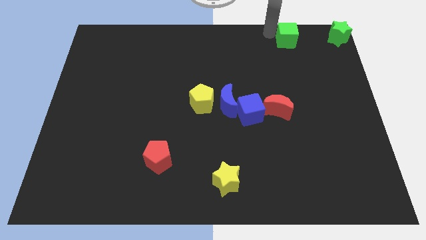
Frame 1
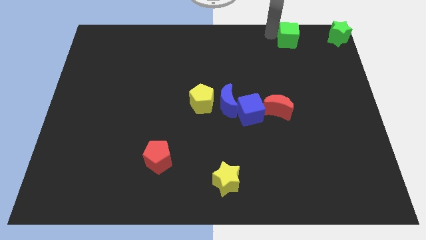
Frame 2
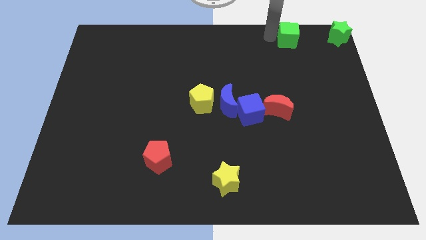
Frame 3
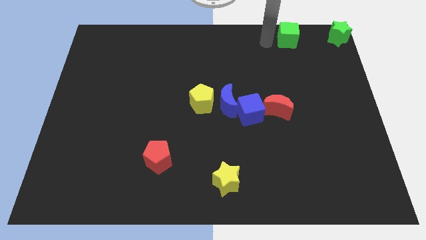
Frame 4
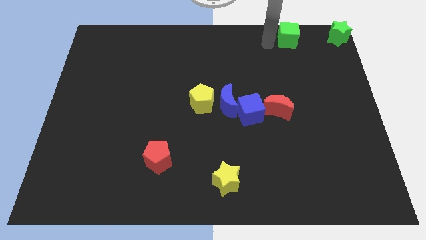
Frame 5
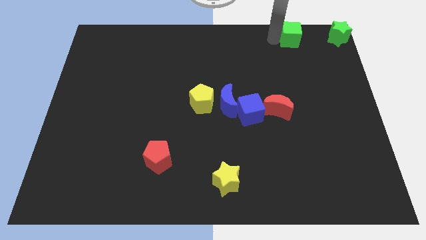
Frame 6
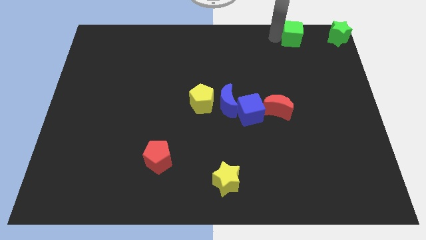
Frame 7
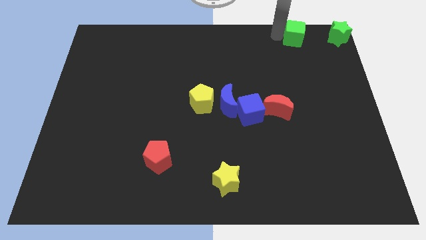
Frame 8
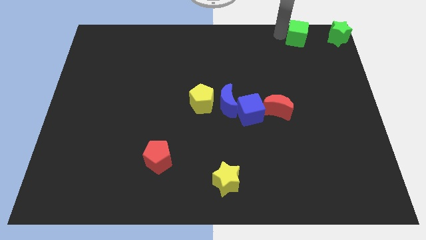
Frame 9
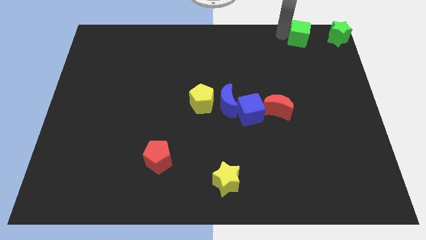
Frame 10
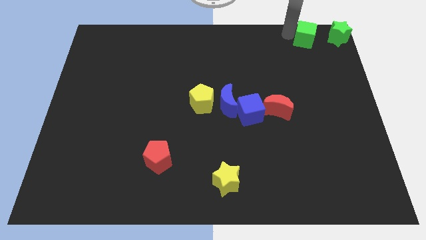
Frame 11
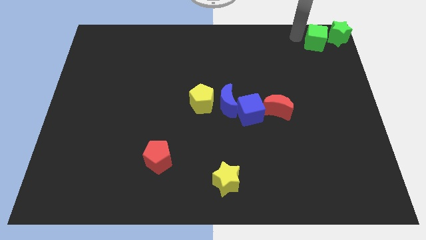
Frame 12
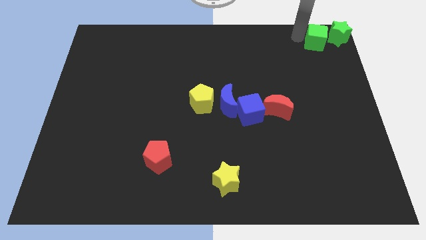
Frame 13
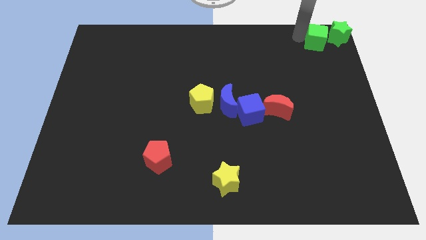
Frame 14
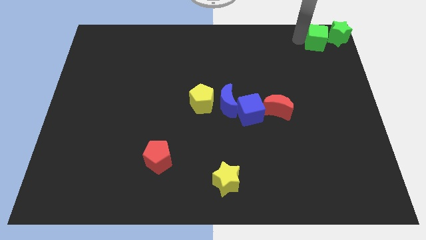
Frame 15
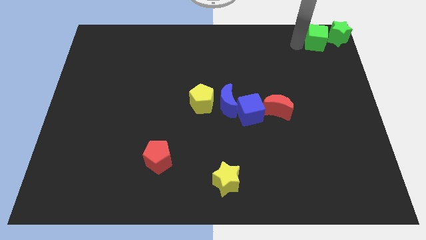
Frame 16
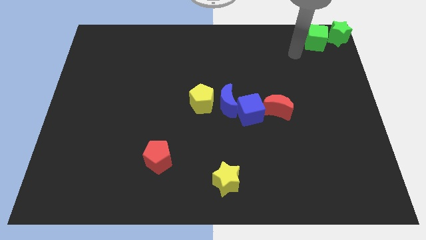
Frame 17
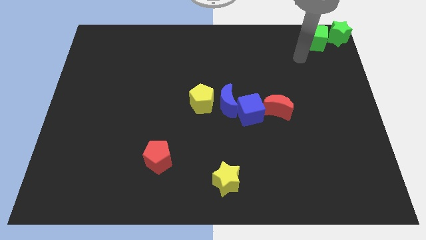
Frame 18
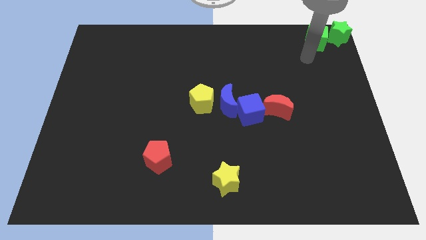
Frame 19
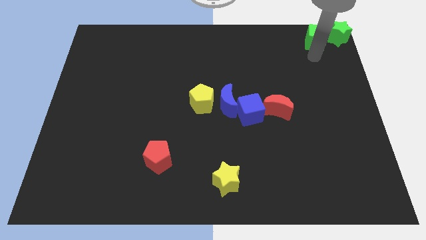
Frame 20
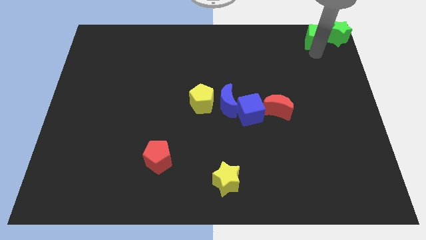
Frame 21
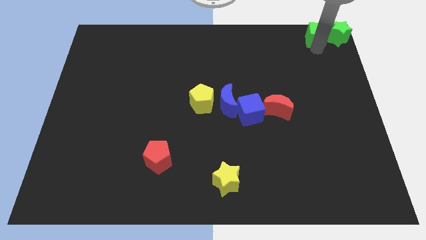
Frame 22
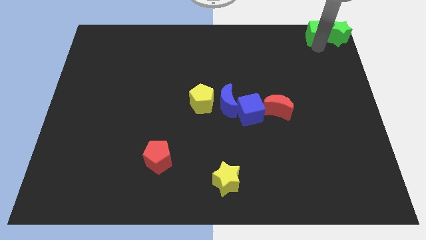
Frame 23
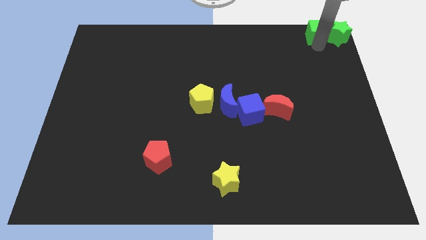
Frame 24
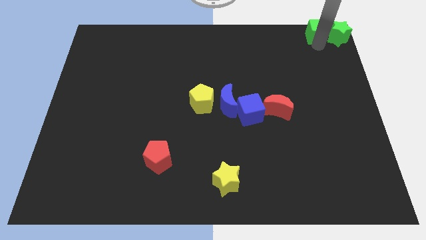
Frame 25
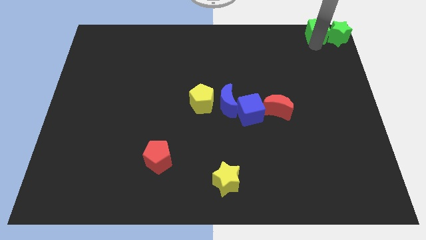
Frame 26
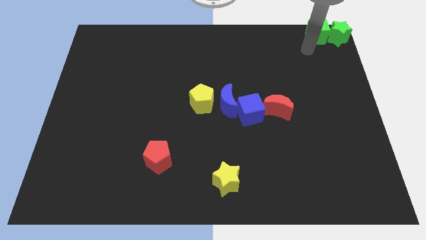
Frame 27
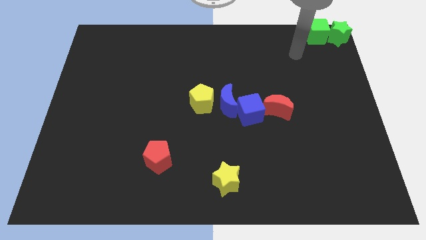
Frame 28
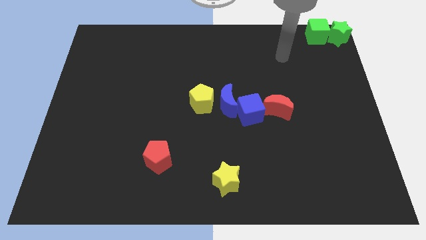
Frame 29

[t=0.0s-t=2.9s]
push the green cube to the left of green star

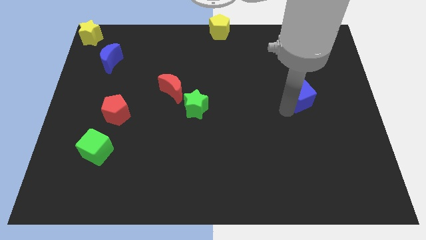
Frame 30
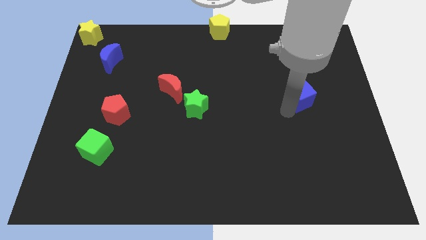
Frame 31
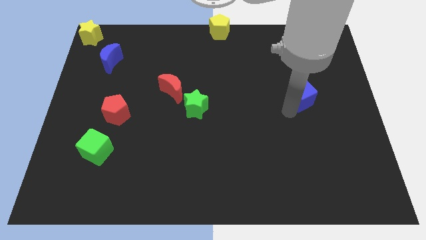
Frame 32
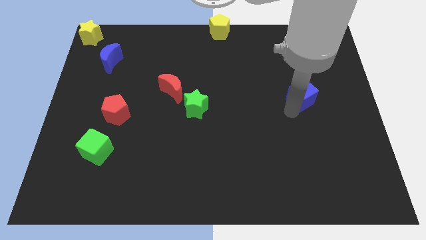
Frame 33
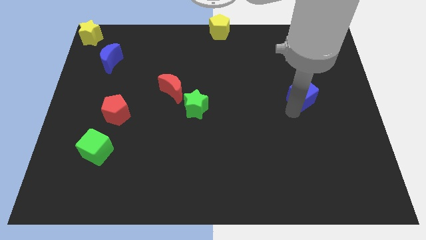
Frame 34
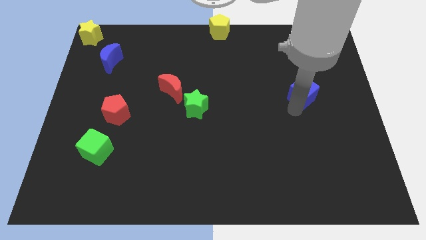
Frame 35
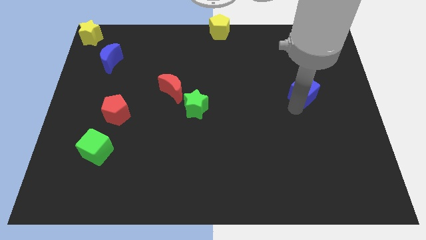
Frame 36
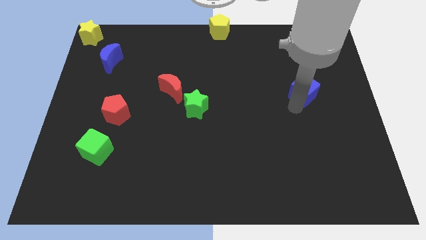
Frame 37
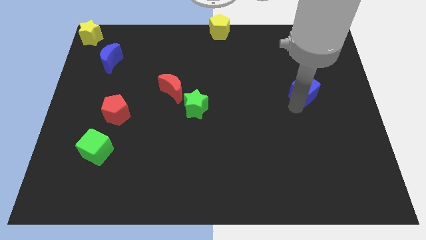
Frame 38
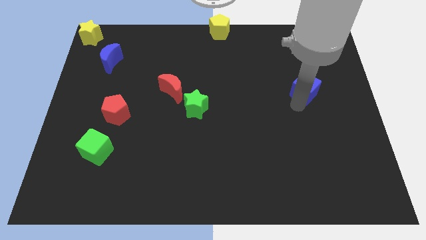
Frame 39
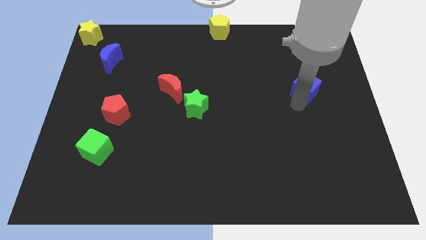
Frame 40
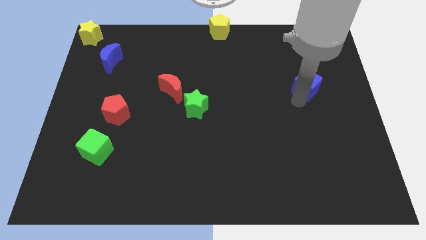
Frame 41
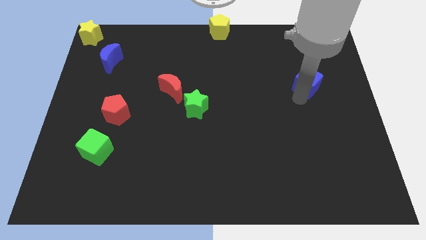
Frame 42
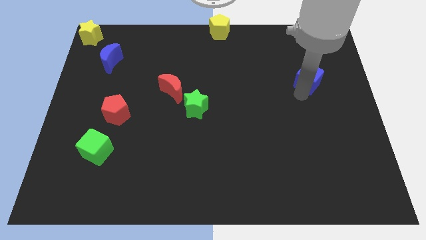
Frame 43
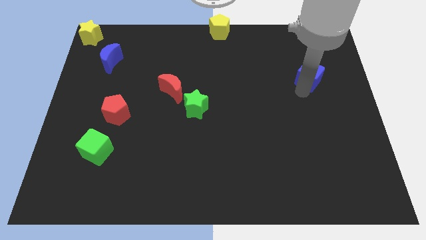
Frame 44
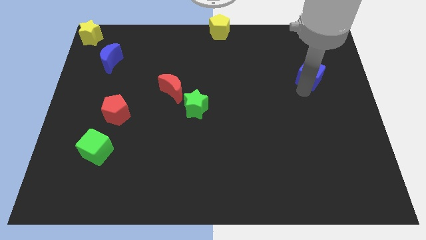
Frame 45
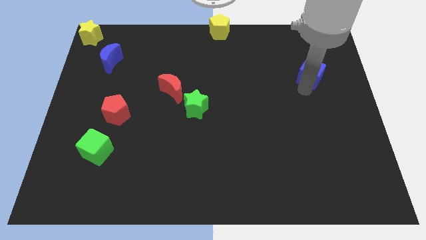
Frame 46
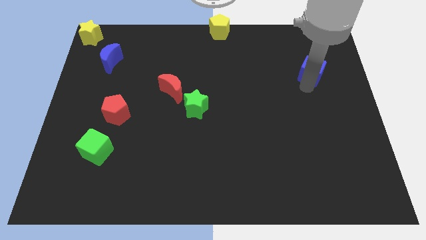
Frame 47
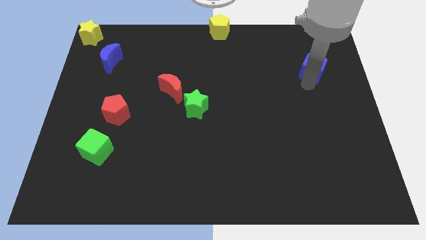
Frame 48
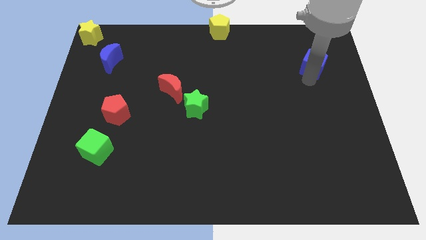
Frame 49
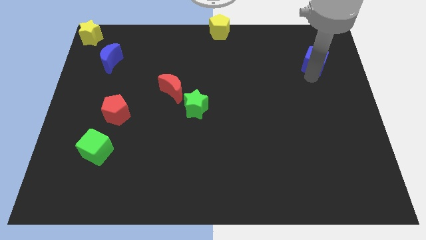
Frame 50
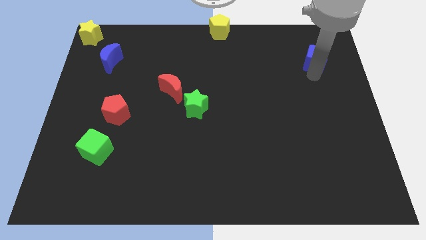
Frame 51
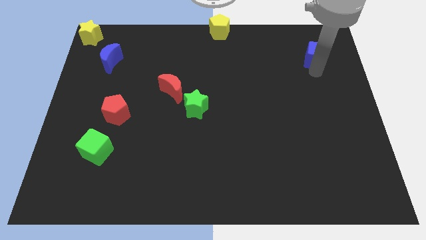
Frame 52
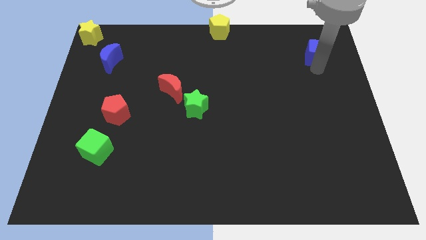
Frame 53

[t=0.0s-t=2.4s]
push the blue cube to the right side of the board

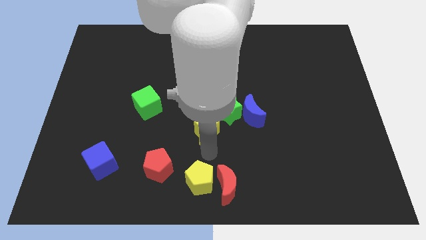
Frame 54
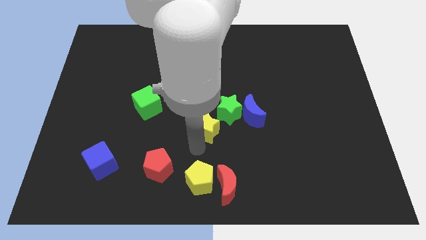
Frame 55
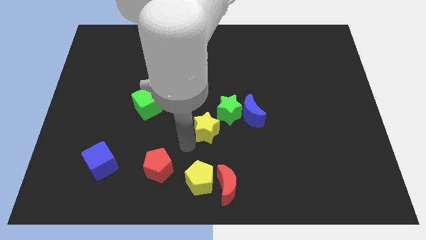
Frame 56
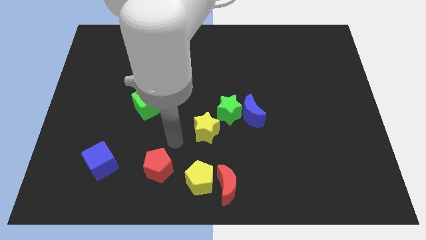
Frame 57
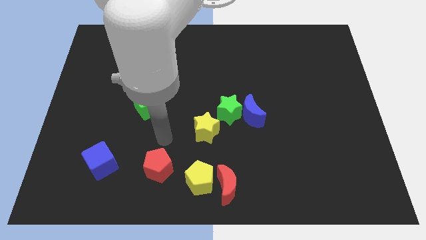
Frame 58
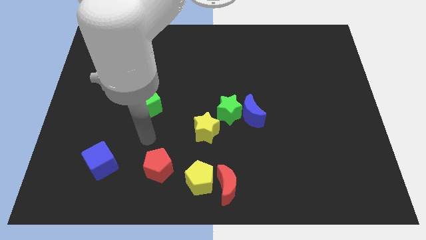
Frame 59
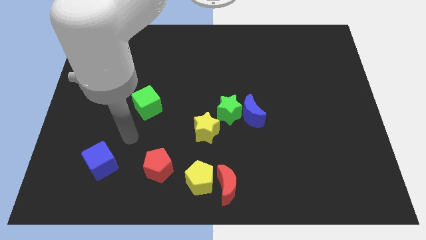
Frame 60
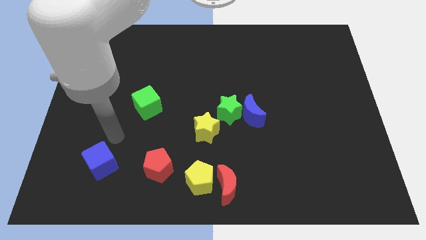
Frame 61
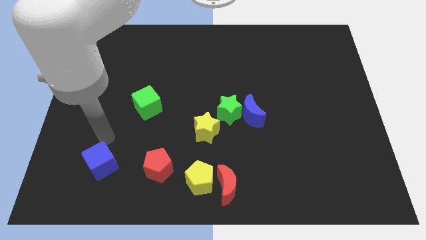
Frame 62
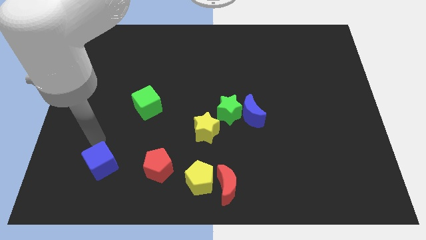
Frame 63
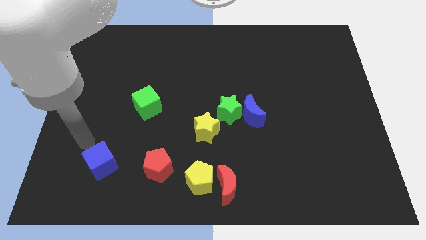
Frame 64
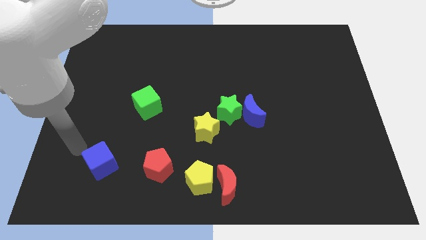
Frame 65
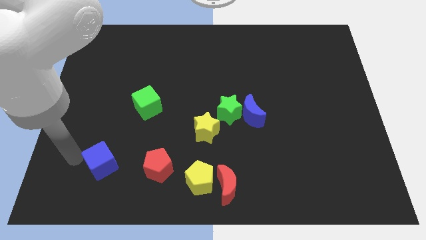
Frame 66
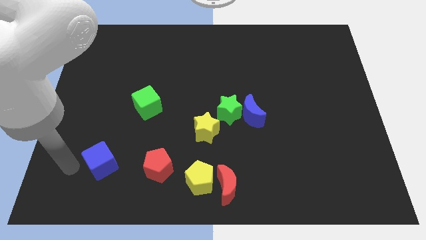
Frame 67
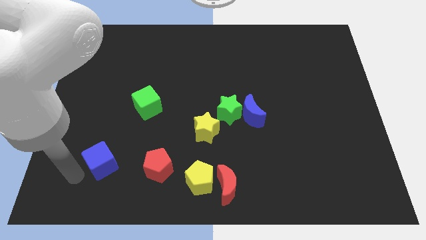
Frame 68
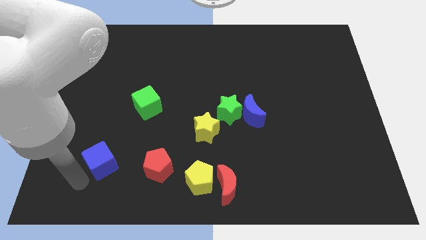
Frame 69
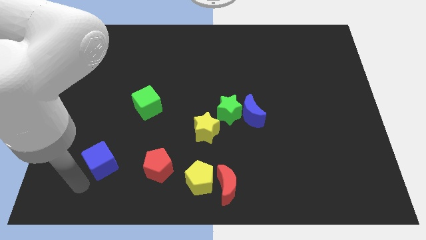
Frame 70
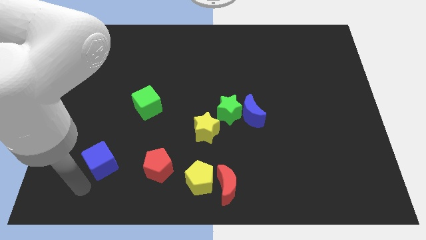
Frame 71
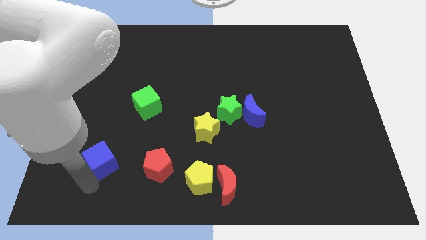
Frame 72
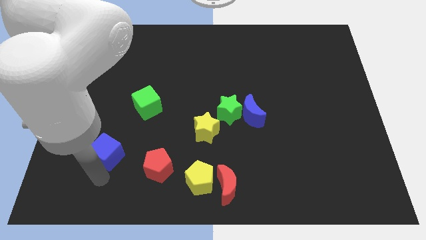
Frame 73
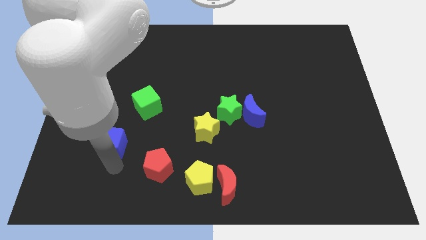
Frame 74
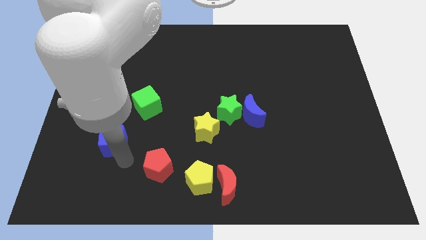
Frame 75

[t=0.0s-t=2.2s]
slightly push the blue cube towards the top

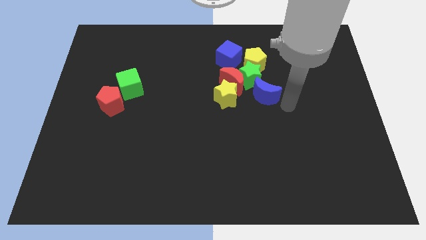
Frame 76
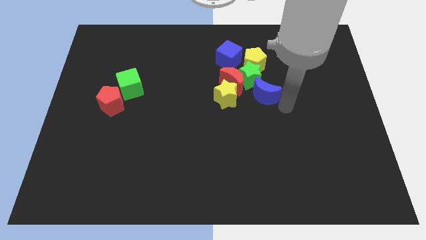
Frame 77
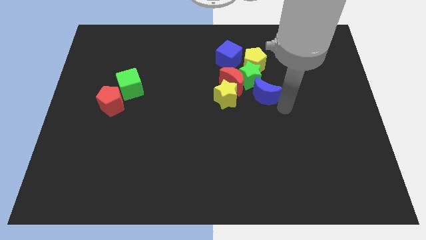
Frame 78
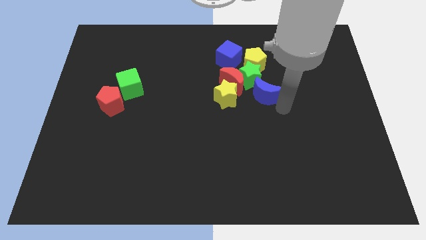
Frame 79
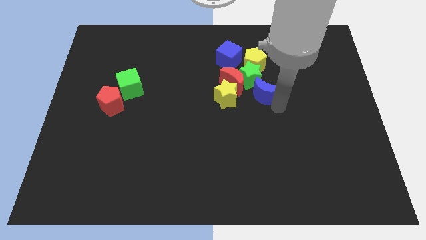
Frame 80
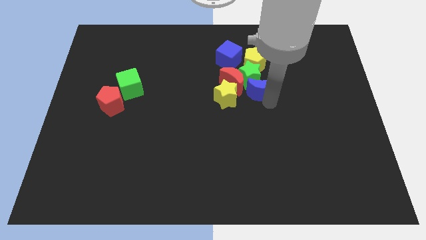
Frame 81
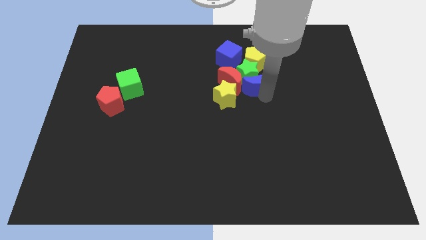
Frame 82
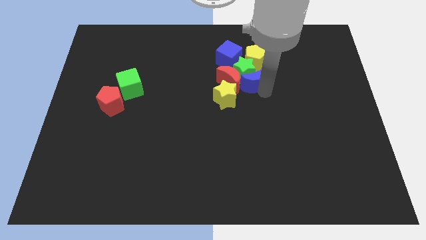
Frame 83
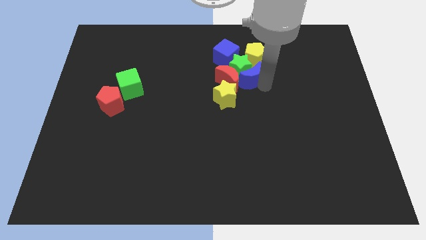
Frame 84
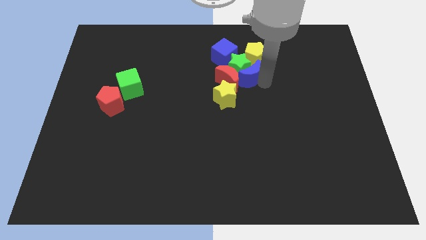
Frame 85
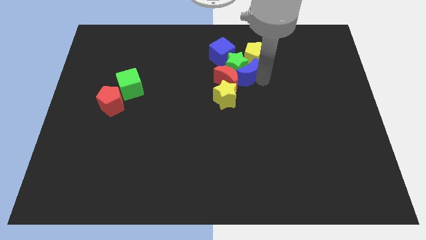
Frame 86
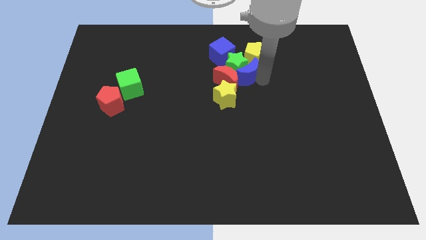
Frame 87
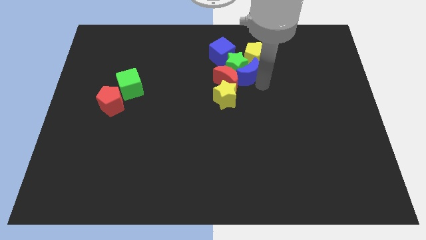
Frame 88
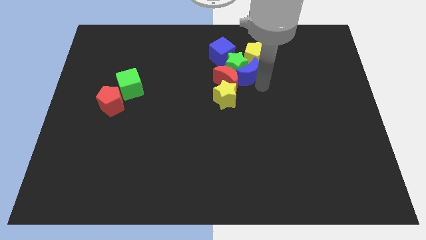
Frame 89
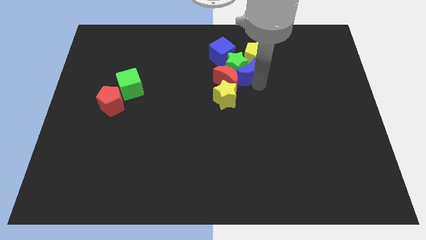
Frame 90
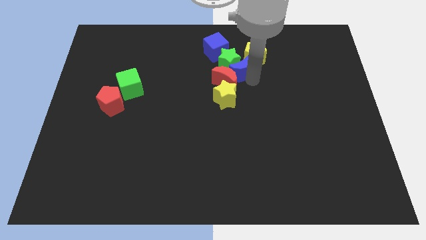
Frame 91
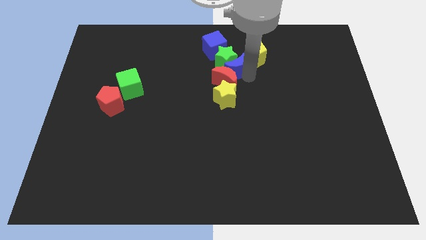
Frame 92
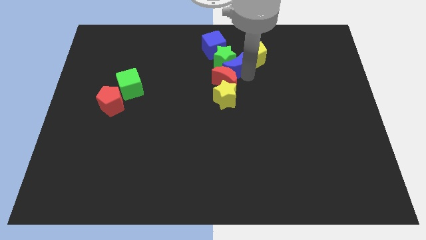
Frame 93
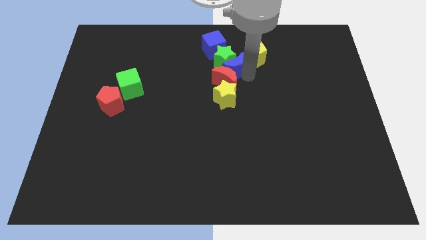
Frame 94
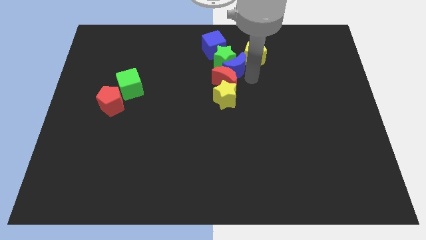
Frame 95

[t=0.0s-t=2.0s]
push the blue moon into the green star
